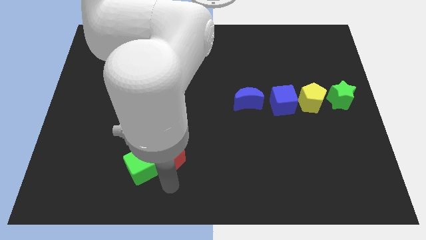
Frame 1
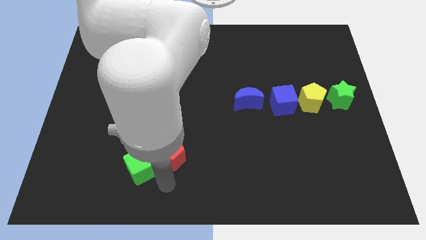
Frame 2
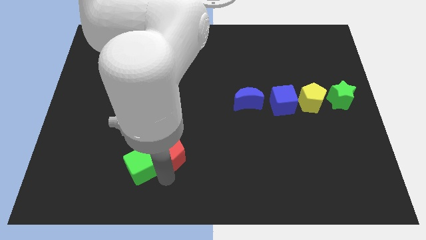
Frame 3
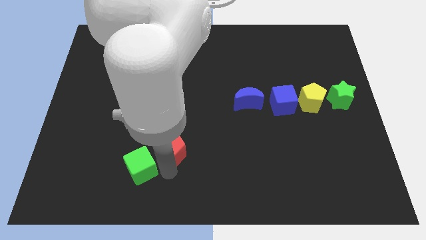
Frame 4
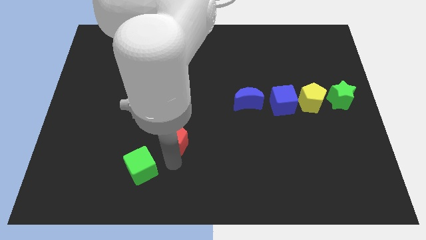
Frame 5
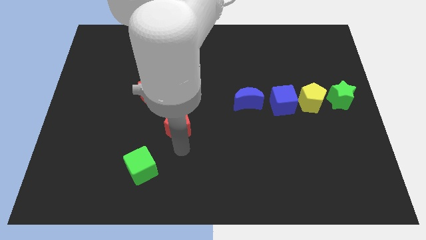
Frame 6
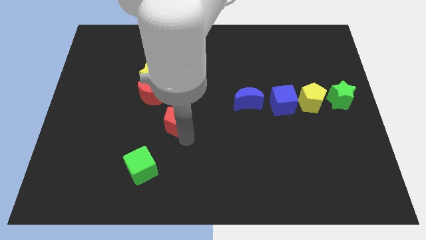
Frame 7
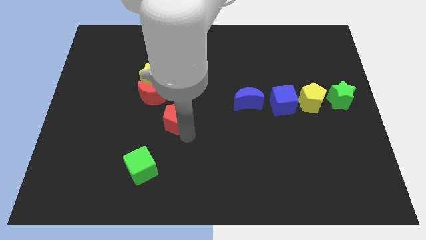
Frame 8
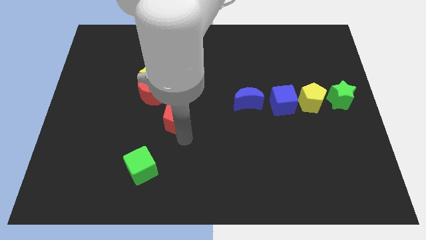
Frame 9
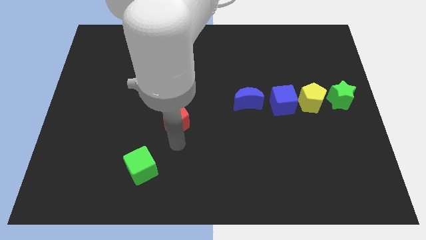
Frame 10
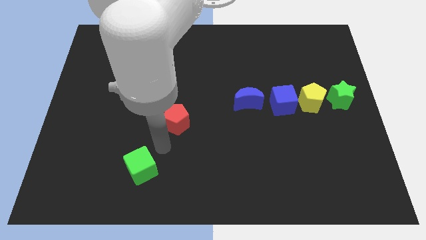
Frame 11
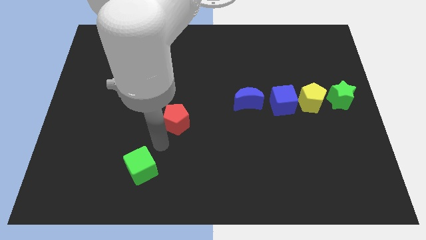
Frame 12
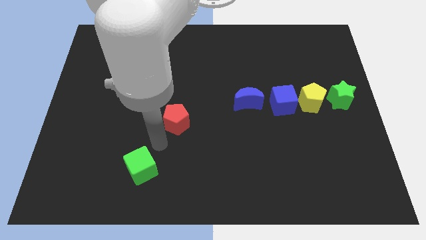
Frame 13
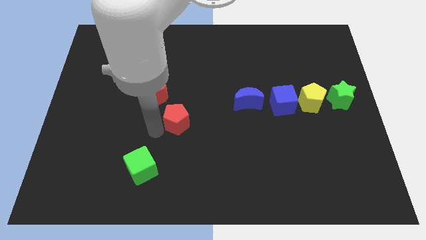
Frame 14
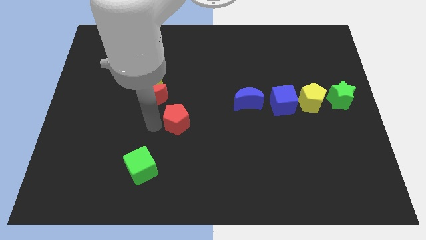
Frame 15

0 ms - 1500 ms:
move the red pentagon towards red crescent

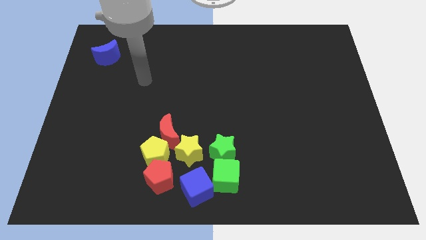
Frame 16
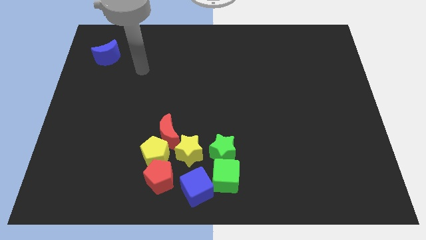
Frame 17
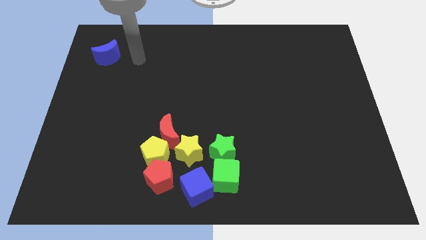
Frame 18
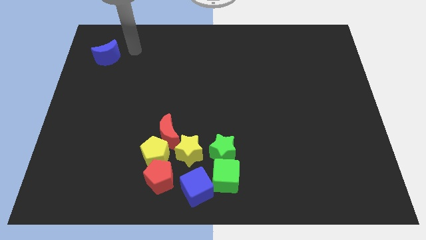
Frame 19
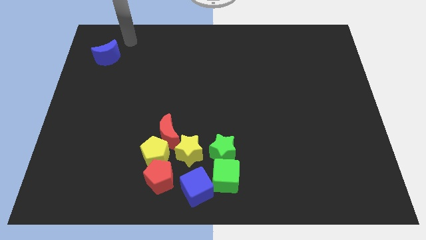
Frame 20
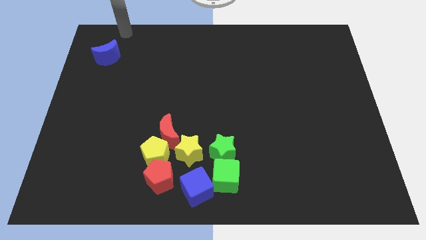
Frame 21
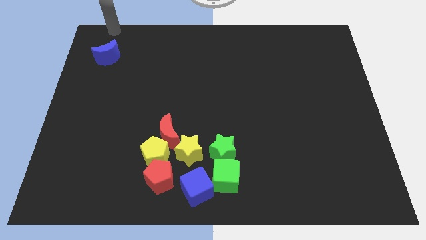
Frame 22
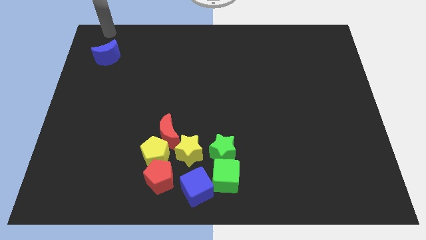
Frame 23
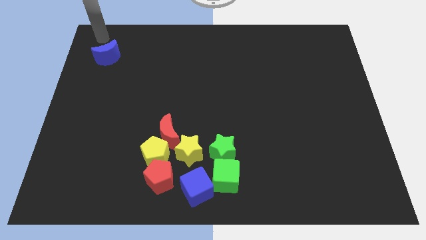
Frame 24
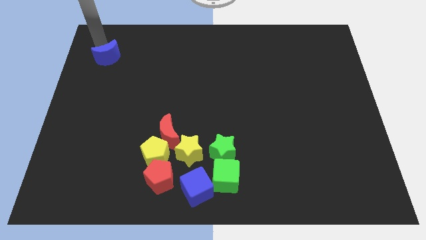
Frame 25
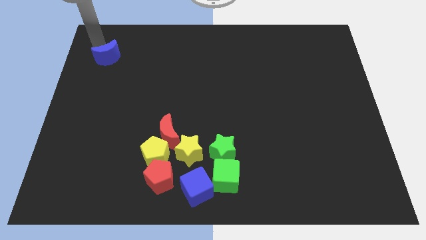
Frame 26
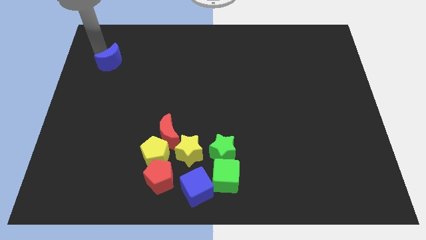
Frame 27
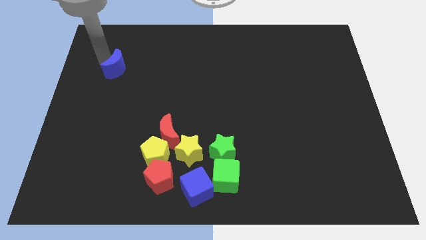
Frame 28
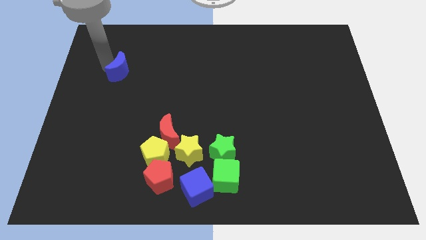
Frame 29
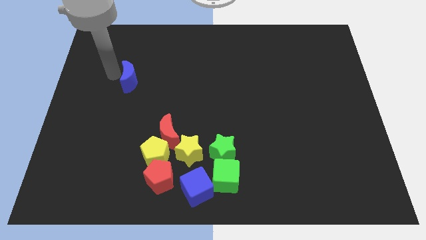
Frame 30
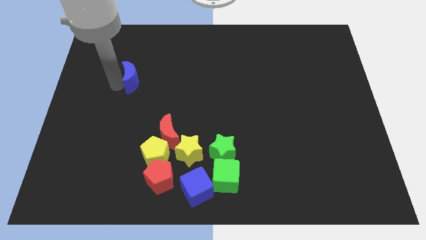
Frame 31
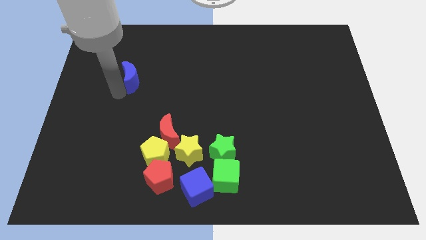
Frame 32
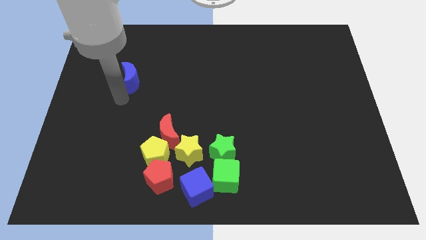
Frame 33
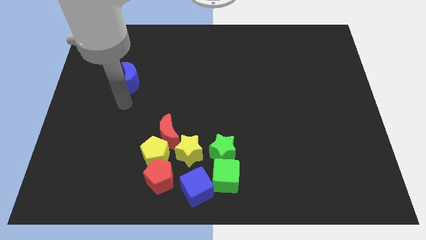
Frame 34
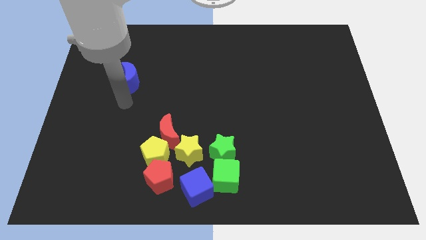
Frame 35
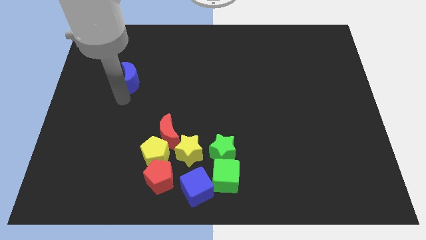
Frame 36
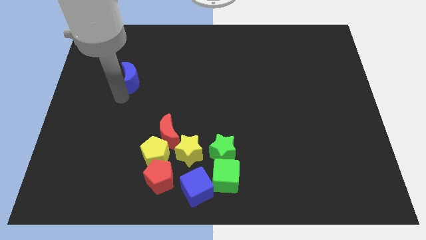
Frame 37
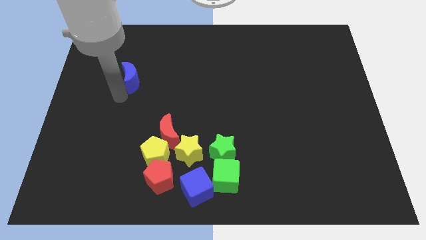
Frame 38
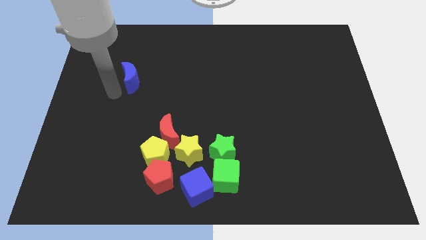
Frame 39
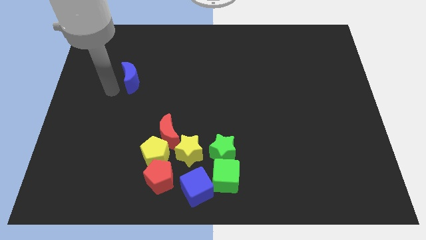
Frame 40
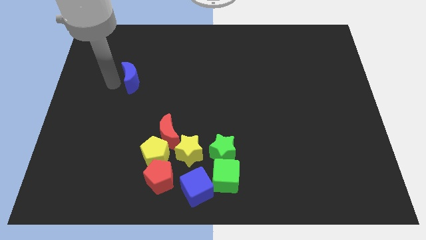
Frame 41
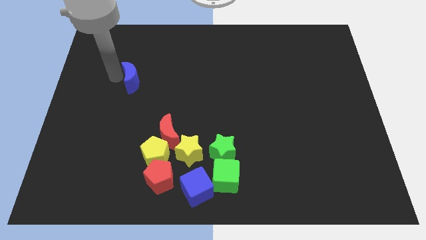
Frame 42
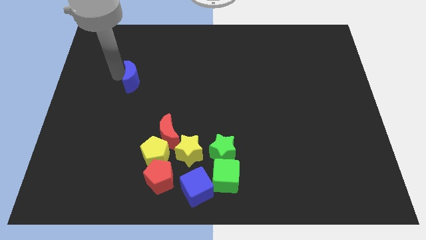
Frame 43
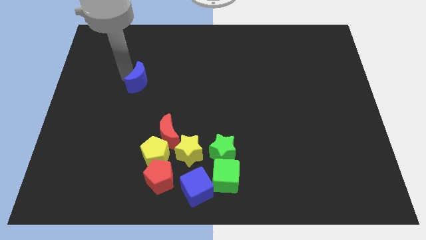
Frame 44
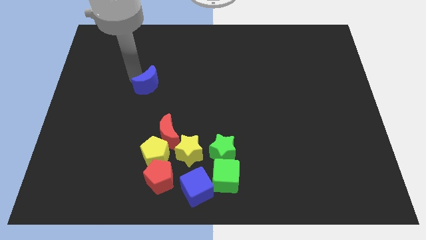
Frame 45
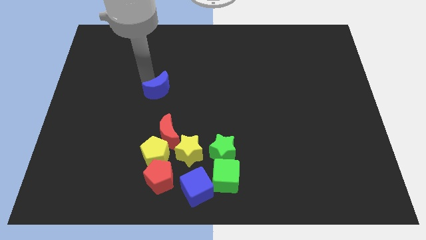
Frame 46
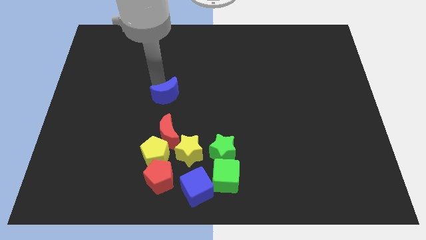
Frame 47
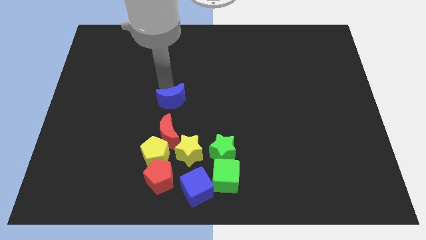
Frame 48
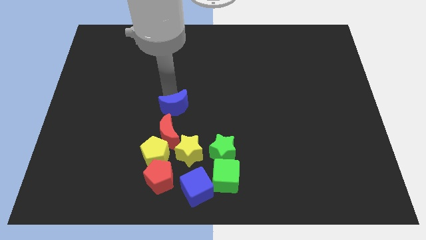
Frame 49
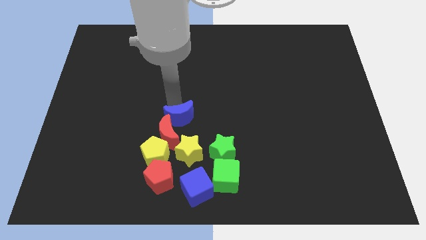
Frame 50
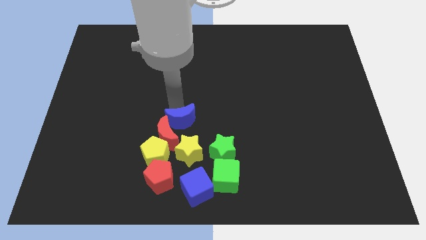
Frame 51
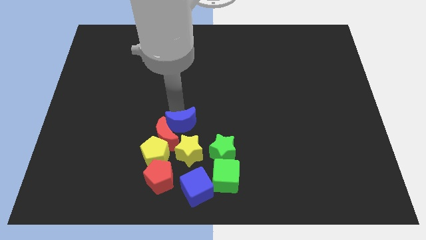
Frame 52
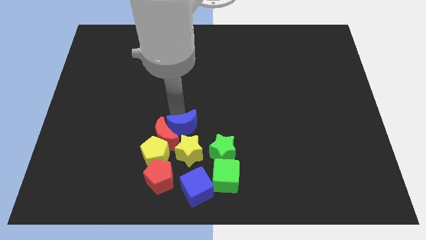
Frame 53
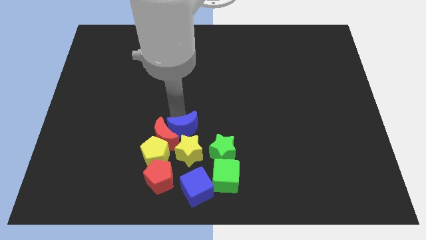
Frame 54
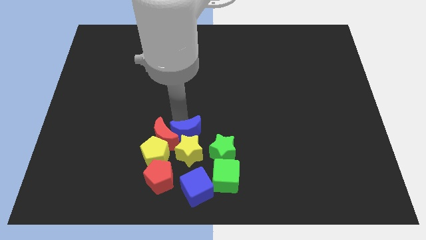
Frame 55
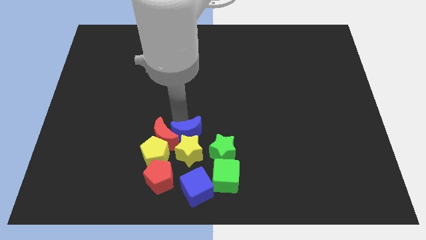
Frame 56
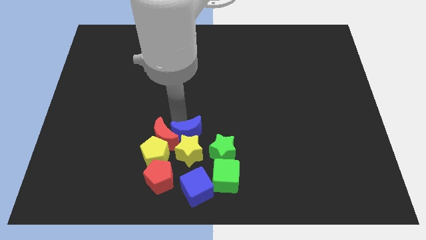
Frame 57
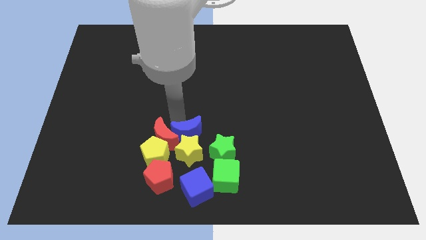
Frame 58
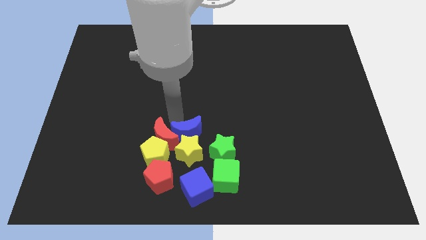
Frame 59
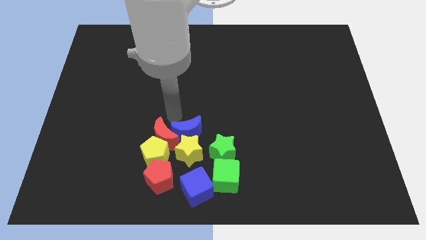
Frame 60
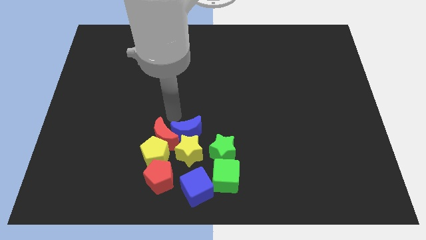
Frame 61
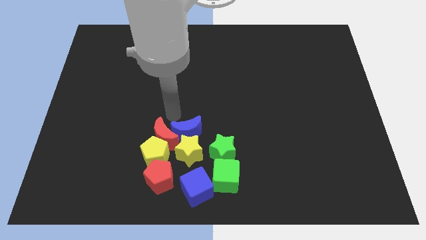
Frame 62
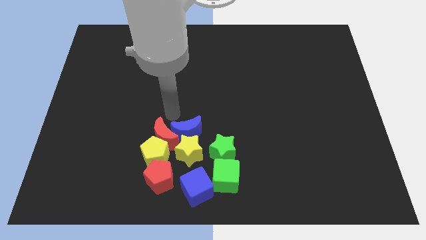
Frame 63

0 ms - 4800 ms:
move the blue moon into the group of blocks

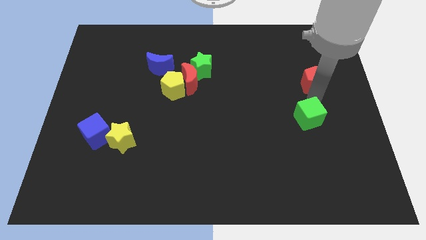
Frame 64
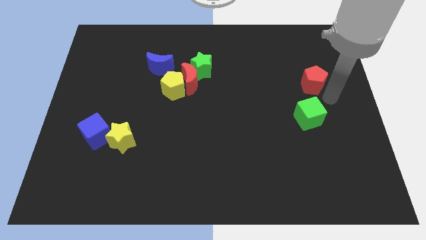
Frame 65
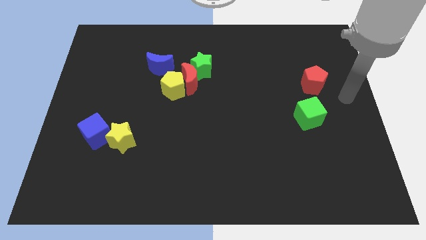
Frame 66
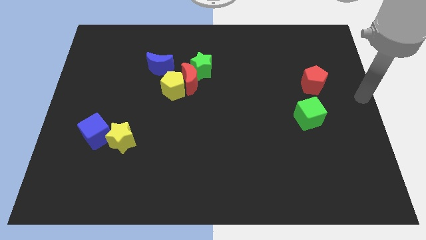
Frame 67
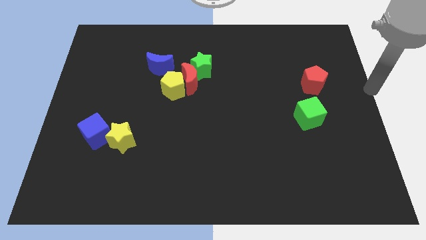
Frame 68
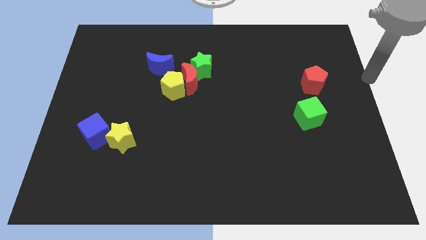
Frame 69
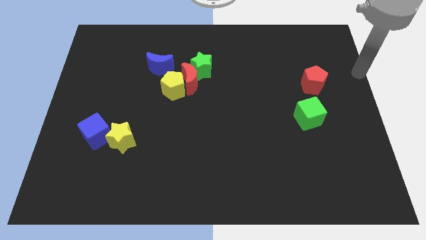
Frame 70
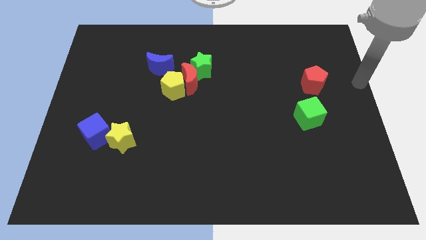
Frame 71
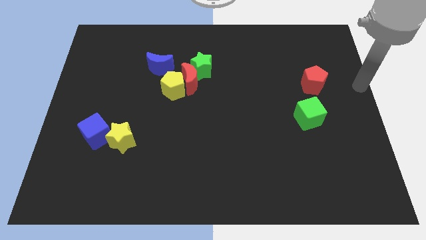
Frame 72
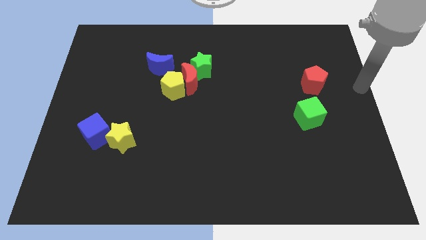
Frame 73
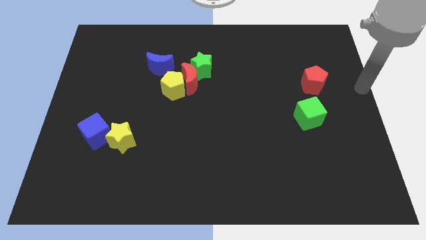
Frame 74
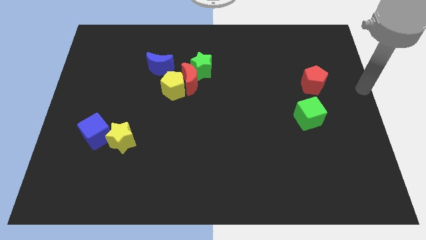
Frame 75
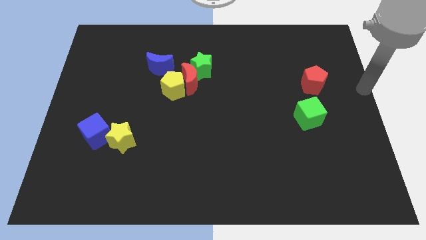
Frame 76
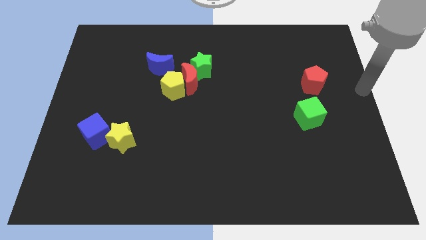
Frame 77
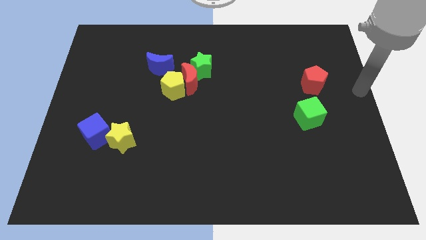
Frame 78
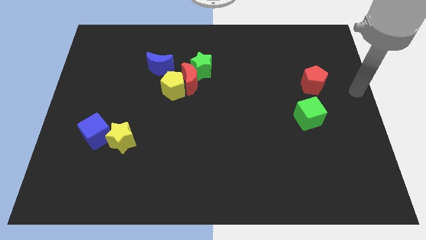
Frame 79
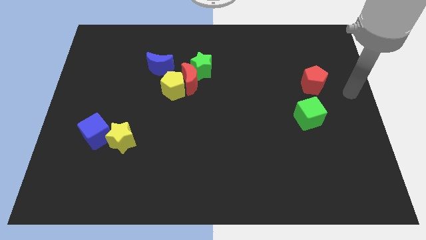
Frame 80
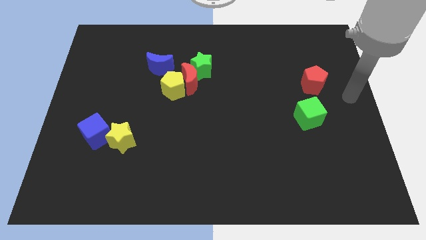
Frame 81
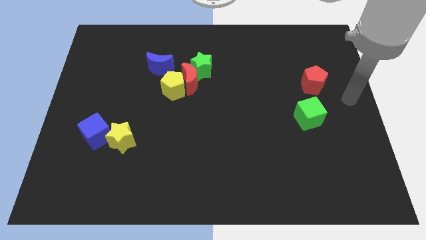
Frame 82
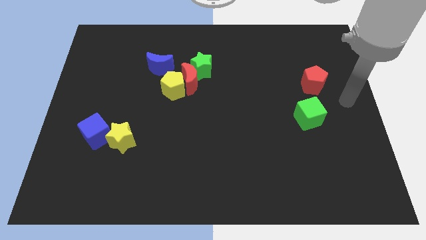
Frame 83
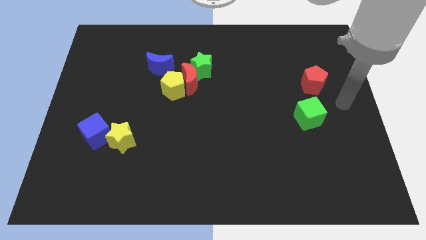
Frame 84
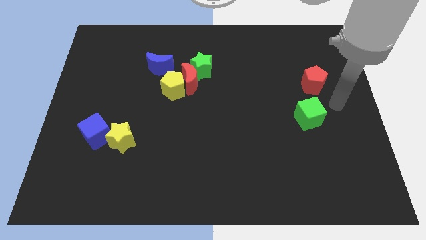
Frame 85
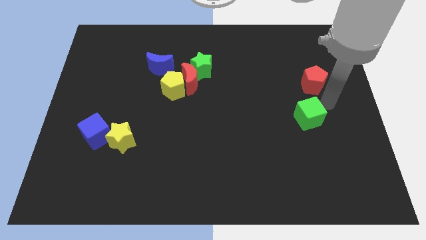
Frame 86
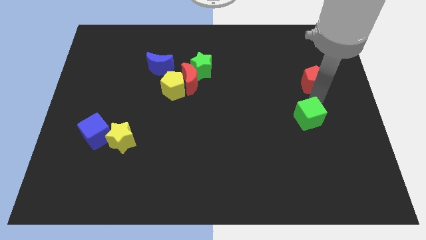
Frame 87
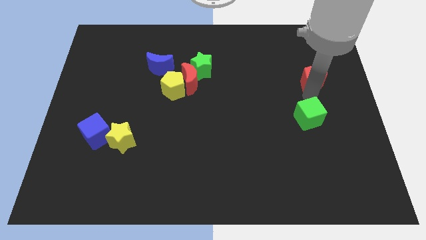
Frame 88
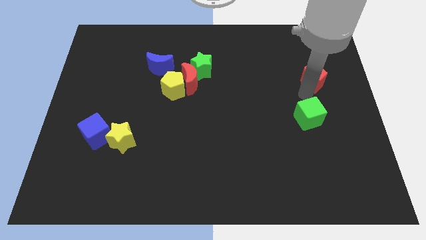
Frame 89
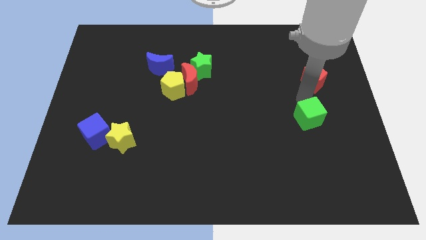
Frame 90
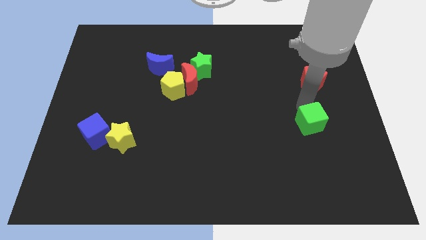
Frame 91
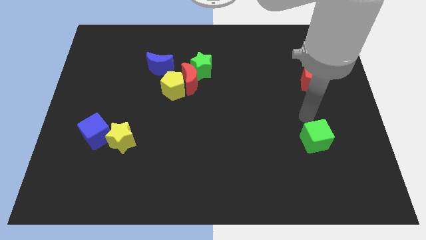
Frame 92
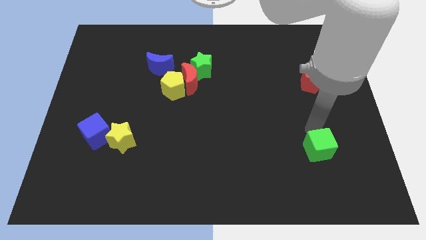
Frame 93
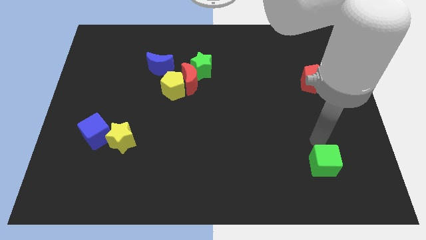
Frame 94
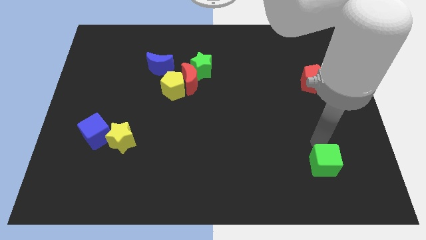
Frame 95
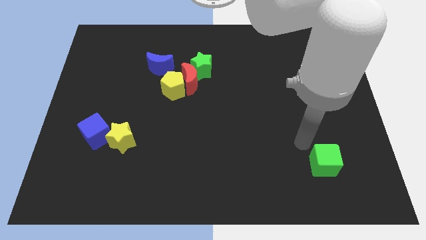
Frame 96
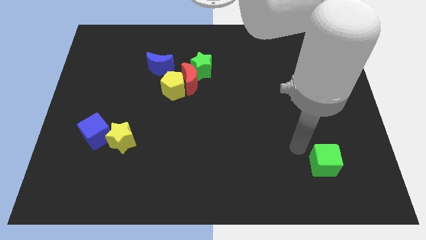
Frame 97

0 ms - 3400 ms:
push the green cube towards the bottom
